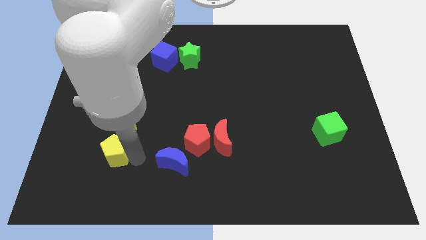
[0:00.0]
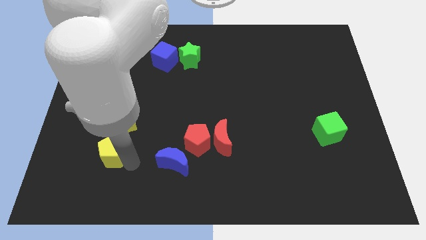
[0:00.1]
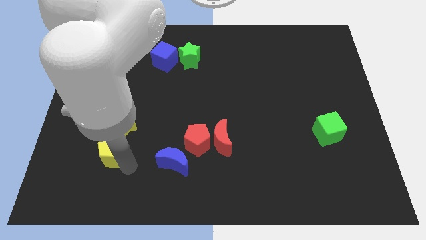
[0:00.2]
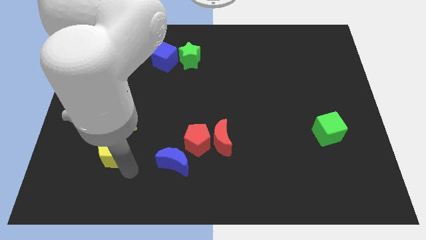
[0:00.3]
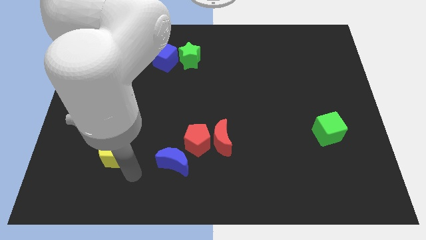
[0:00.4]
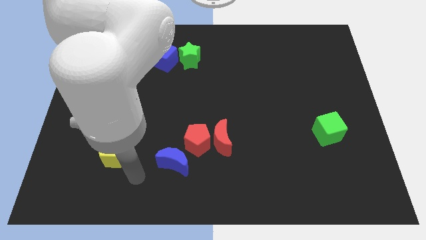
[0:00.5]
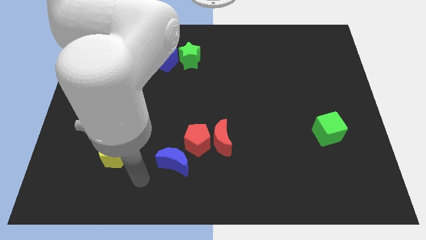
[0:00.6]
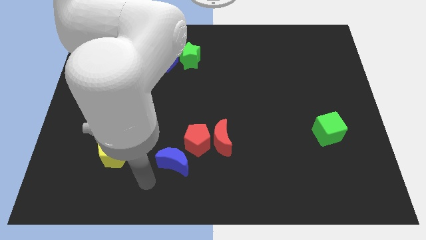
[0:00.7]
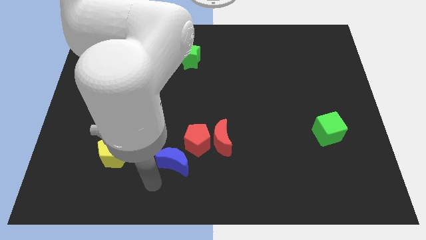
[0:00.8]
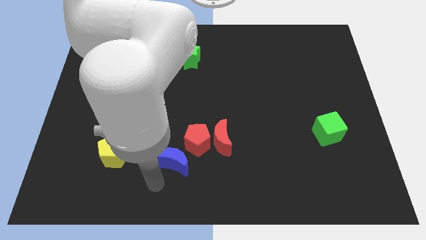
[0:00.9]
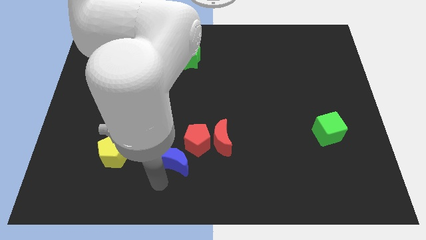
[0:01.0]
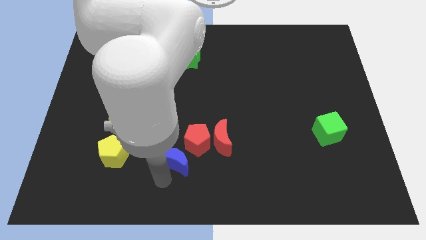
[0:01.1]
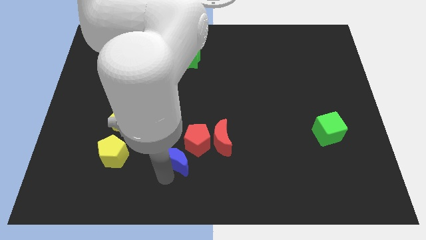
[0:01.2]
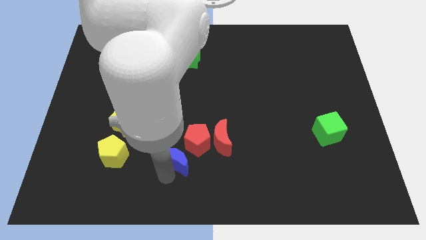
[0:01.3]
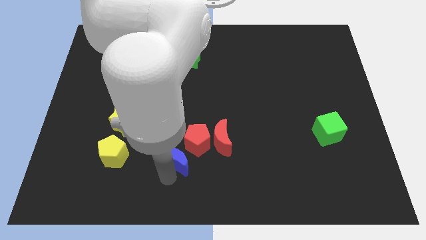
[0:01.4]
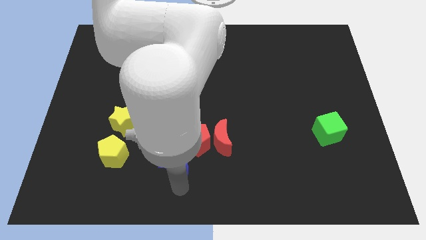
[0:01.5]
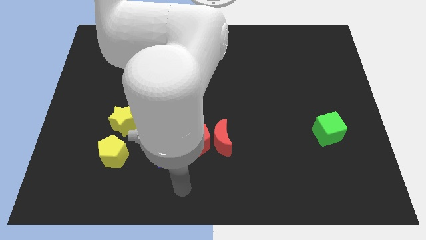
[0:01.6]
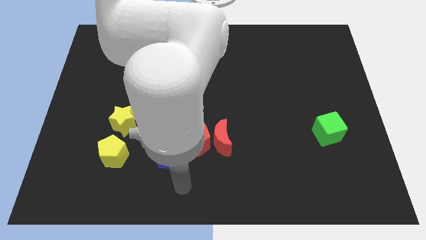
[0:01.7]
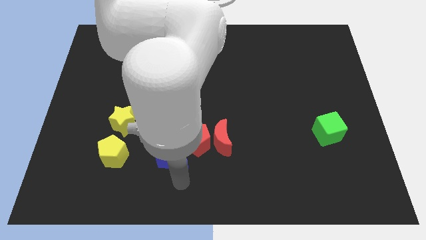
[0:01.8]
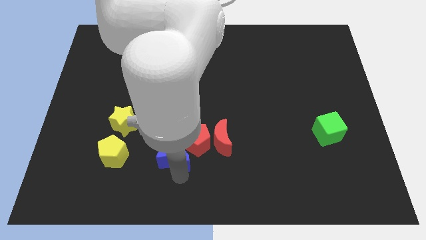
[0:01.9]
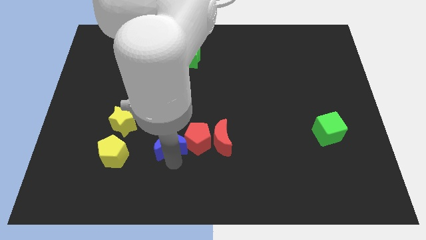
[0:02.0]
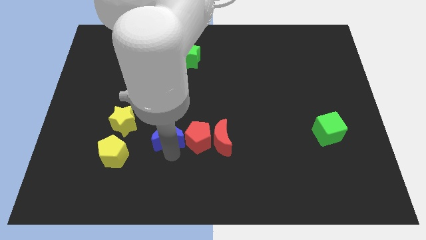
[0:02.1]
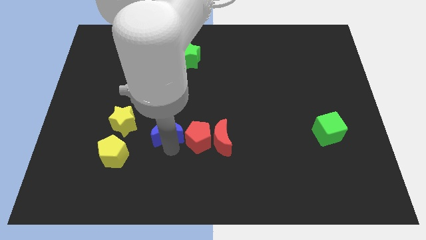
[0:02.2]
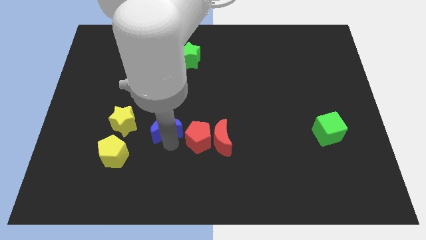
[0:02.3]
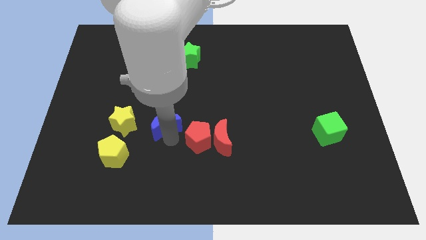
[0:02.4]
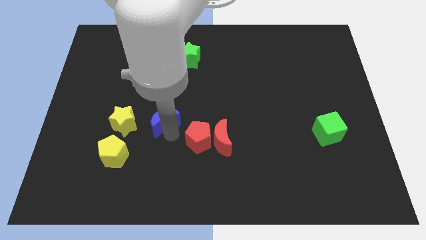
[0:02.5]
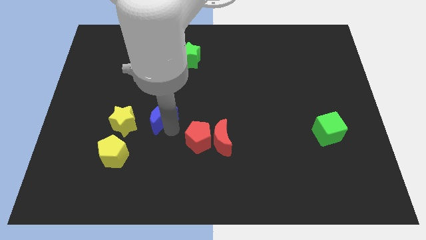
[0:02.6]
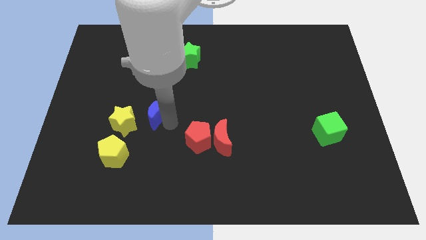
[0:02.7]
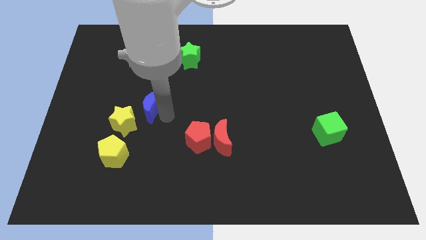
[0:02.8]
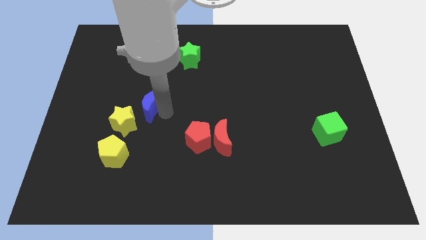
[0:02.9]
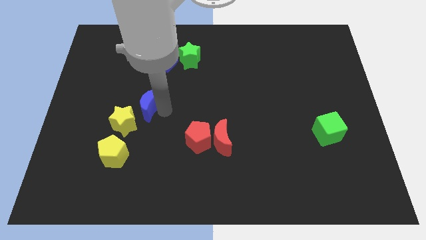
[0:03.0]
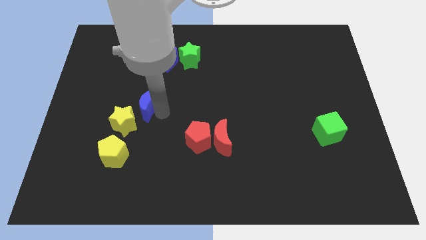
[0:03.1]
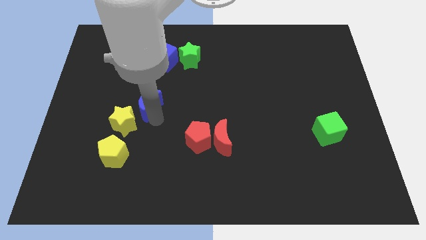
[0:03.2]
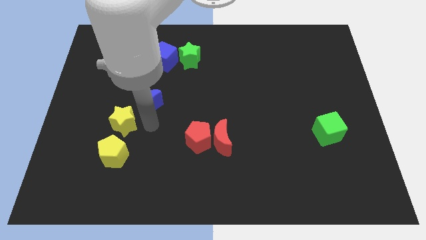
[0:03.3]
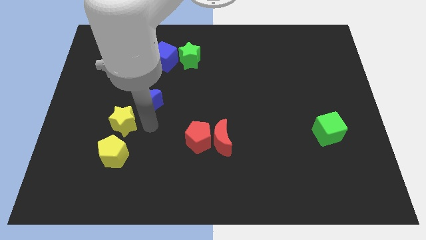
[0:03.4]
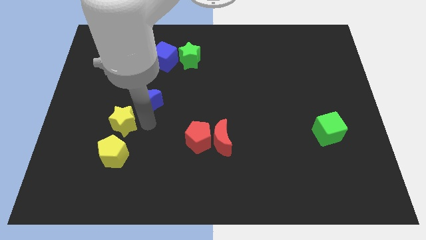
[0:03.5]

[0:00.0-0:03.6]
place blue moon above yellow star

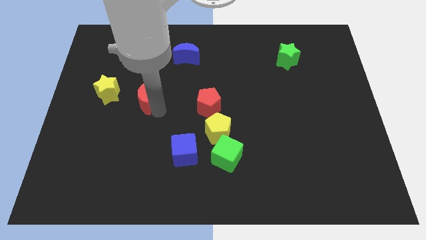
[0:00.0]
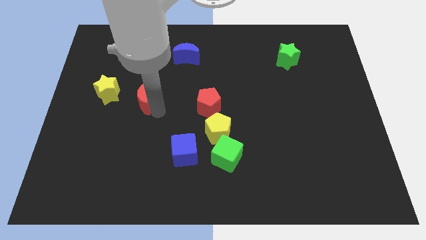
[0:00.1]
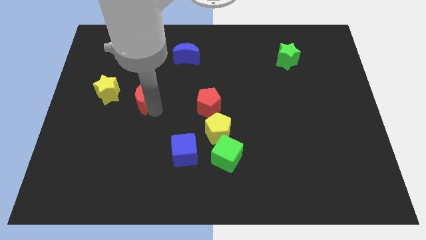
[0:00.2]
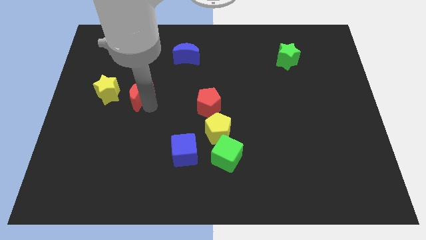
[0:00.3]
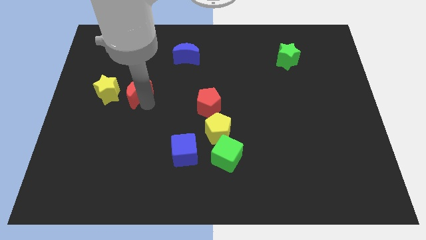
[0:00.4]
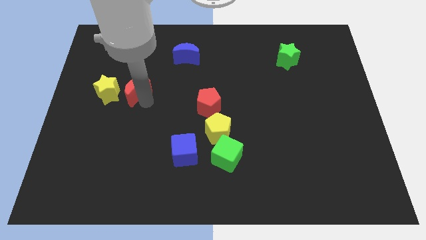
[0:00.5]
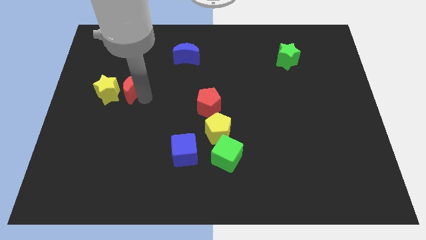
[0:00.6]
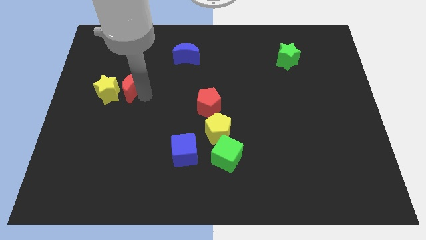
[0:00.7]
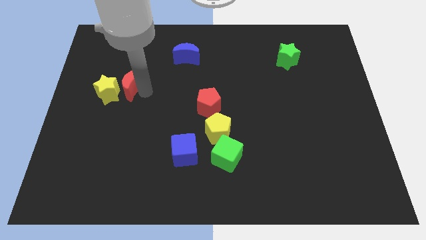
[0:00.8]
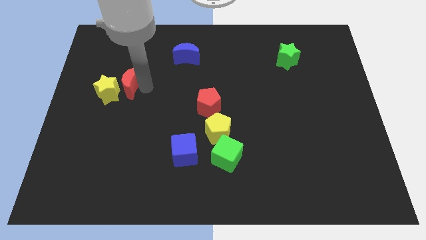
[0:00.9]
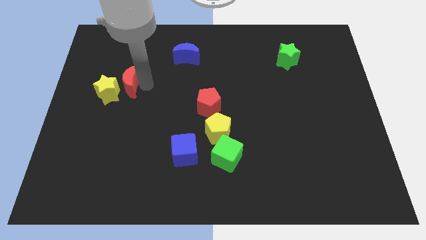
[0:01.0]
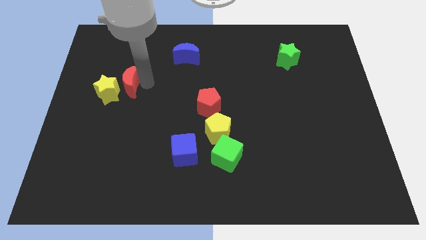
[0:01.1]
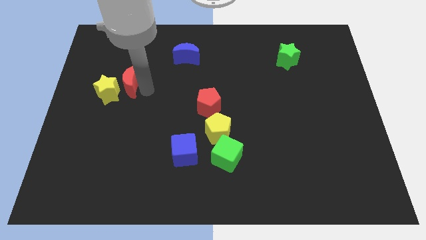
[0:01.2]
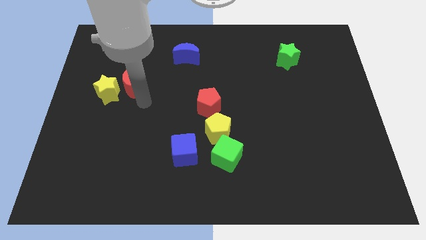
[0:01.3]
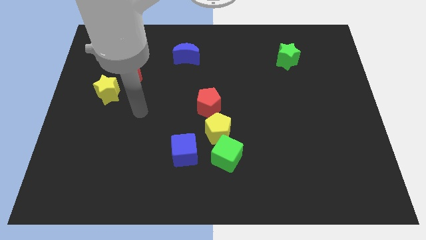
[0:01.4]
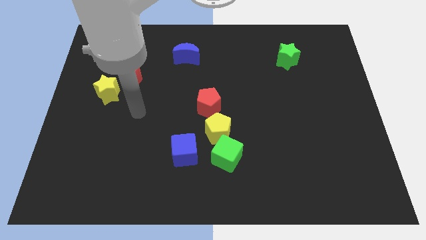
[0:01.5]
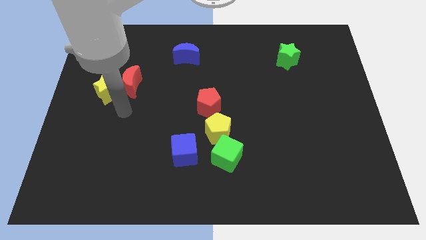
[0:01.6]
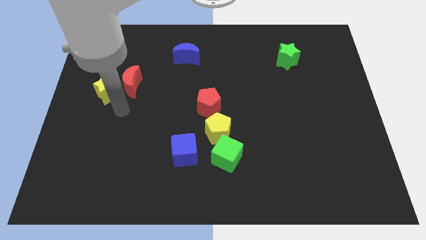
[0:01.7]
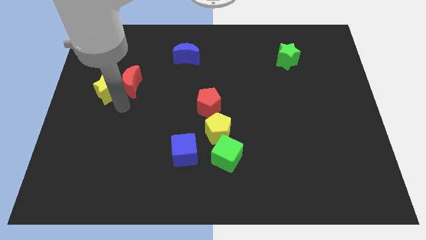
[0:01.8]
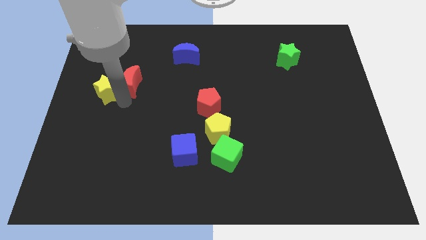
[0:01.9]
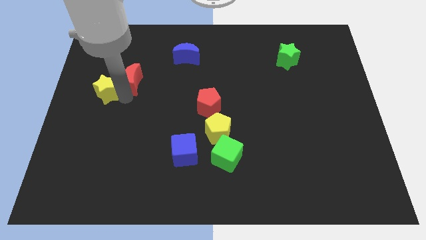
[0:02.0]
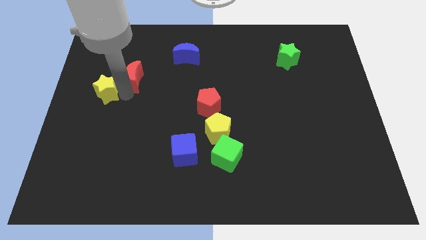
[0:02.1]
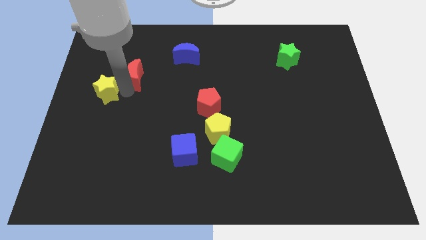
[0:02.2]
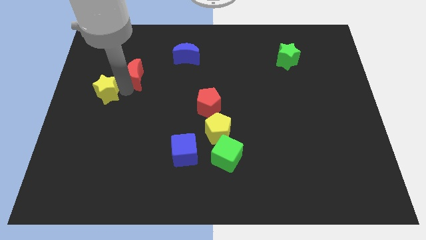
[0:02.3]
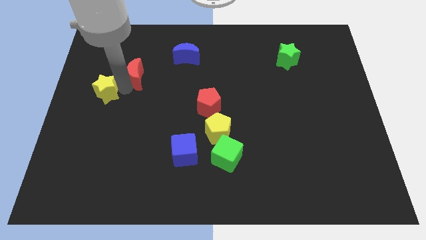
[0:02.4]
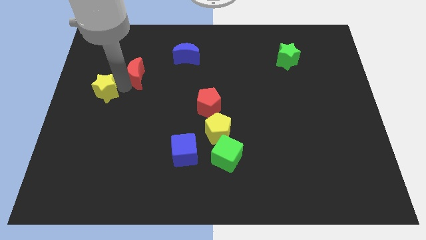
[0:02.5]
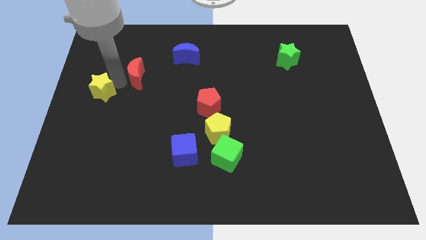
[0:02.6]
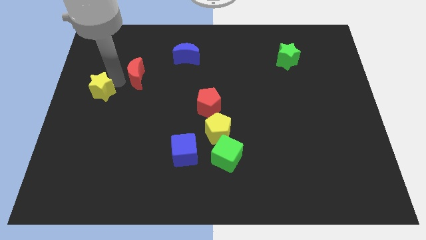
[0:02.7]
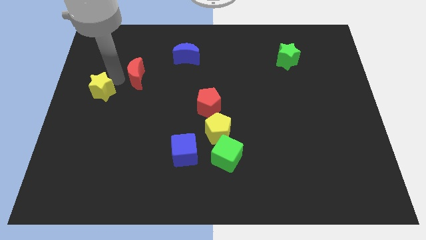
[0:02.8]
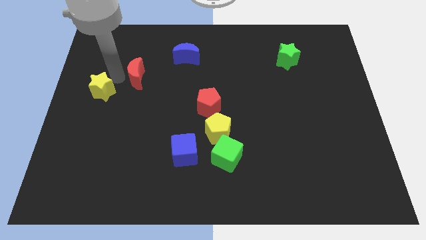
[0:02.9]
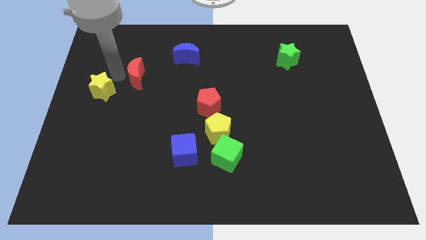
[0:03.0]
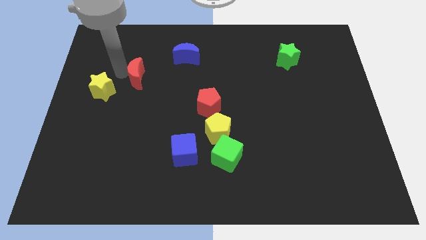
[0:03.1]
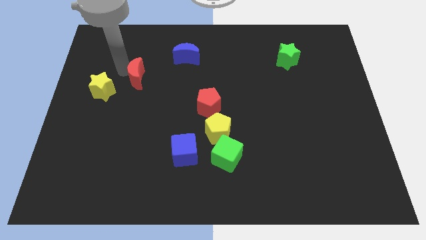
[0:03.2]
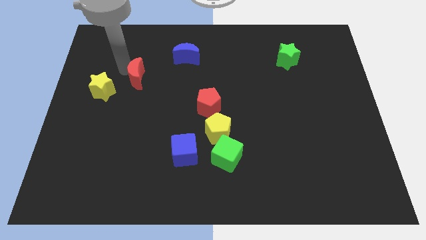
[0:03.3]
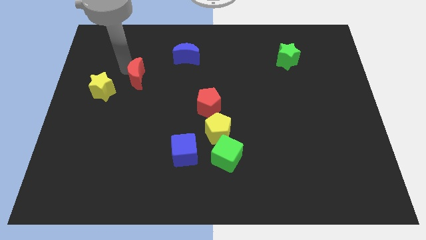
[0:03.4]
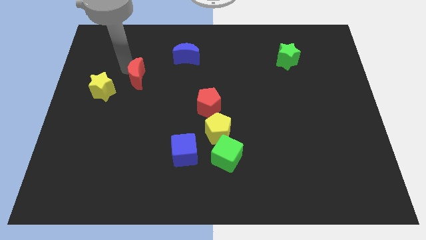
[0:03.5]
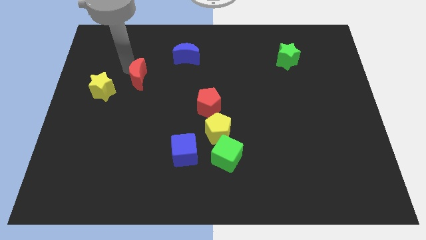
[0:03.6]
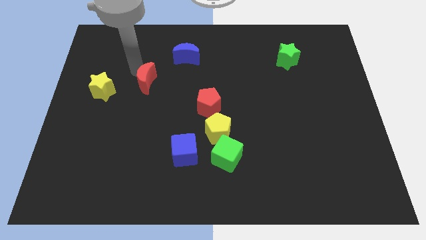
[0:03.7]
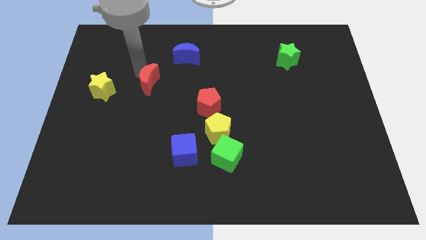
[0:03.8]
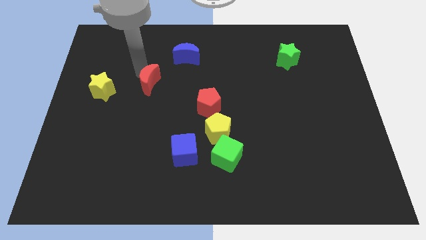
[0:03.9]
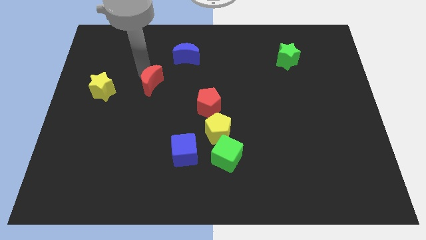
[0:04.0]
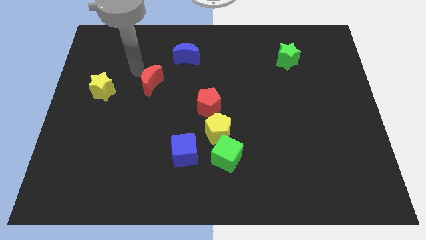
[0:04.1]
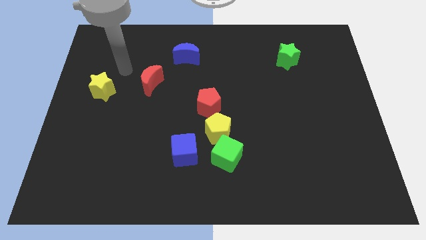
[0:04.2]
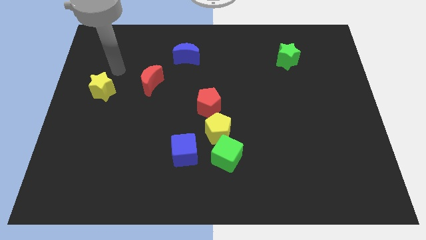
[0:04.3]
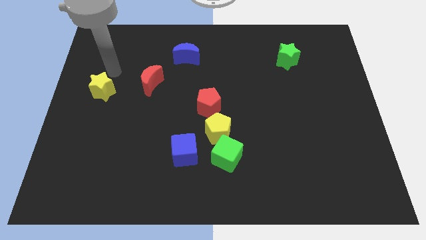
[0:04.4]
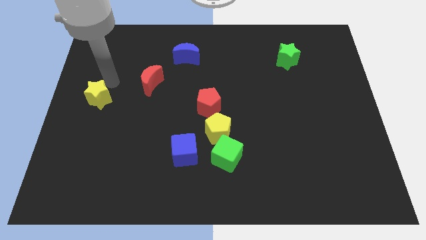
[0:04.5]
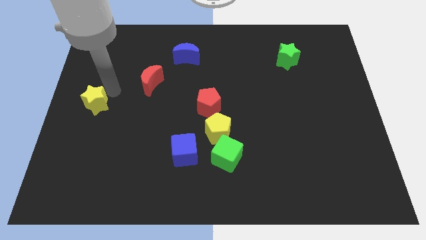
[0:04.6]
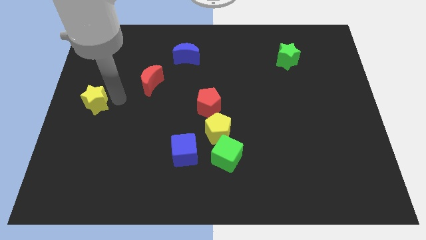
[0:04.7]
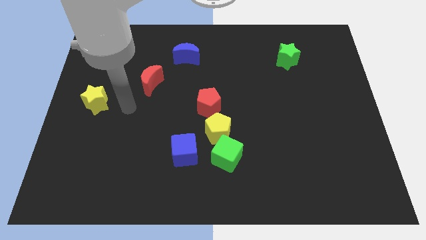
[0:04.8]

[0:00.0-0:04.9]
place the red moon to the top right of yellow star

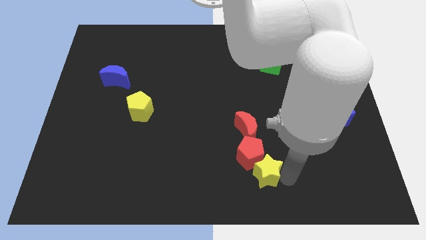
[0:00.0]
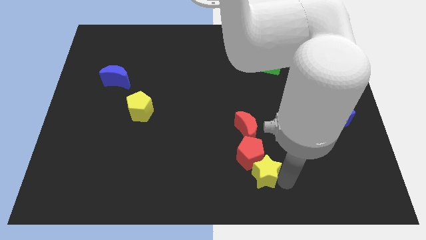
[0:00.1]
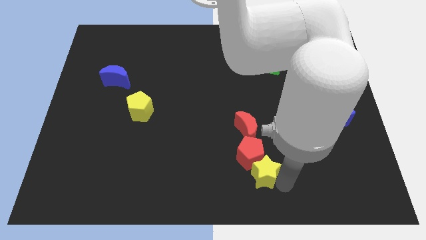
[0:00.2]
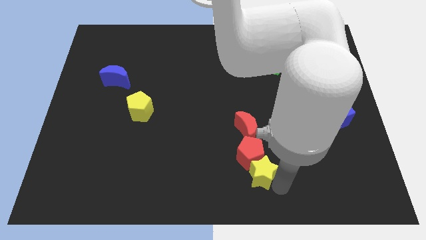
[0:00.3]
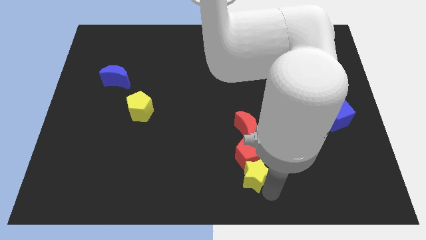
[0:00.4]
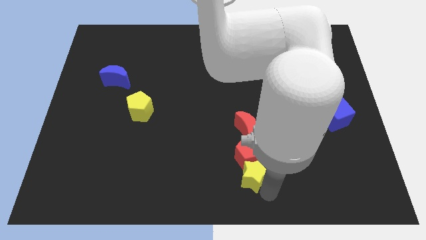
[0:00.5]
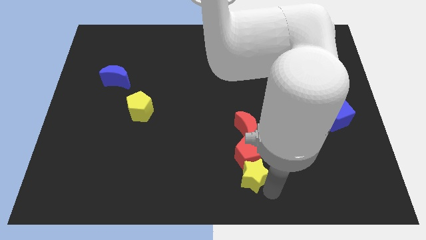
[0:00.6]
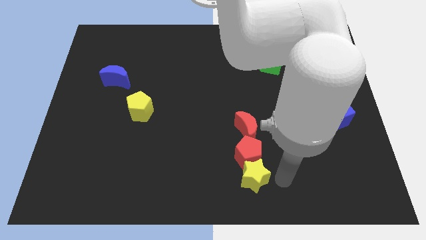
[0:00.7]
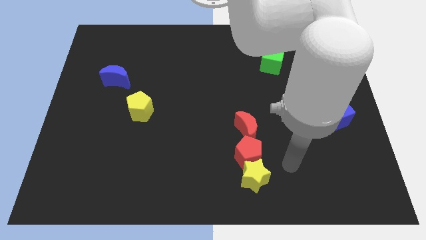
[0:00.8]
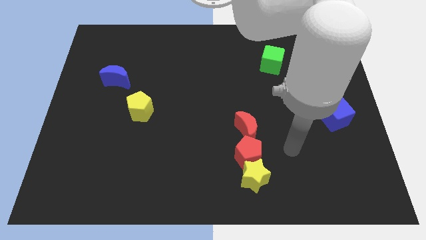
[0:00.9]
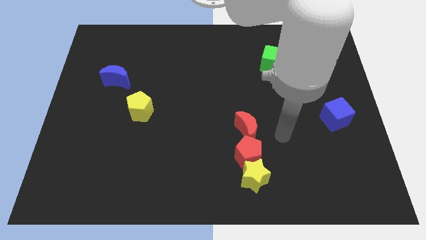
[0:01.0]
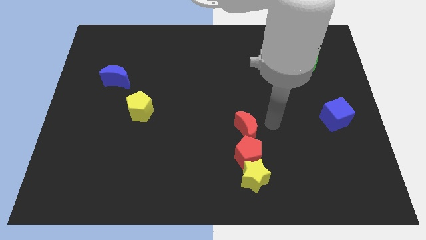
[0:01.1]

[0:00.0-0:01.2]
place the yellow star below the red pentagon
